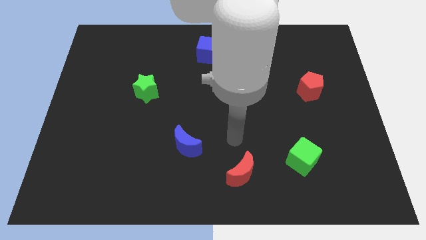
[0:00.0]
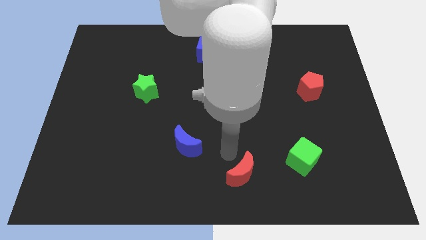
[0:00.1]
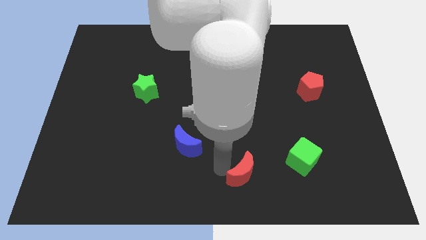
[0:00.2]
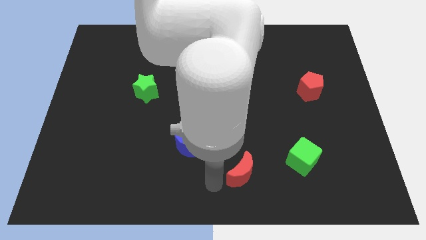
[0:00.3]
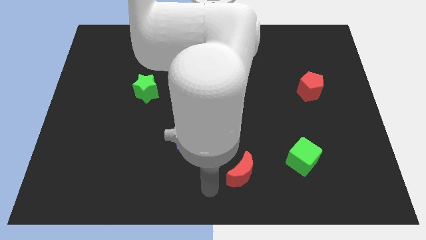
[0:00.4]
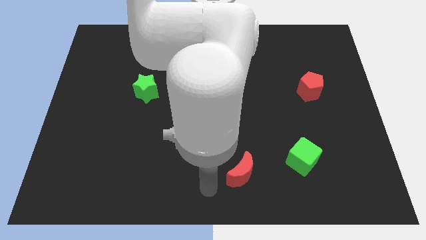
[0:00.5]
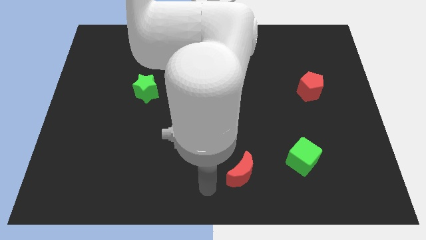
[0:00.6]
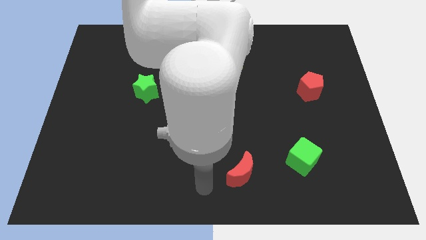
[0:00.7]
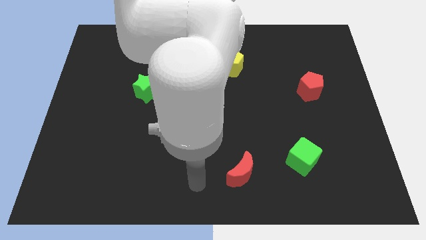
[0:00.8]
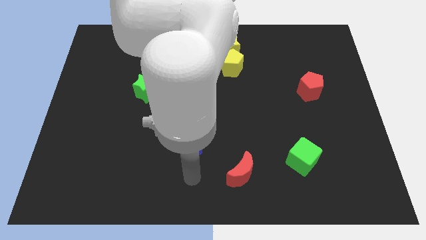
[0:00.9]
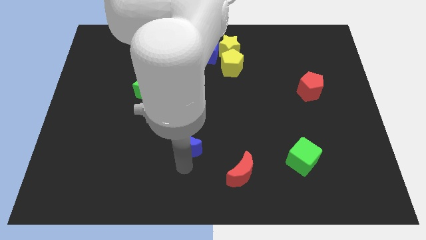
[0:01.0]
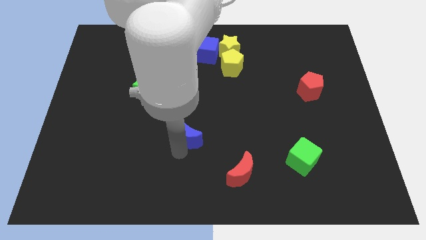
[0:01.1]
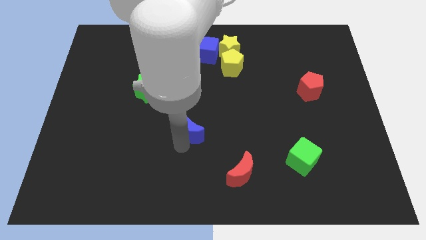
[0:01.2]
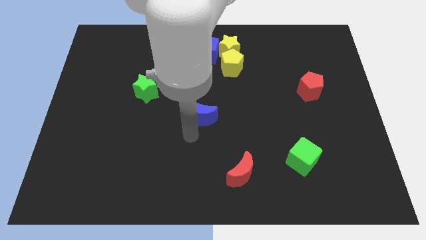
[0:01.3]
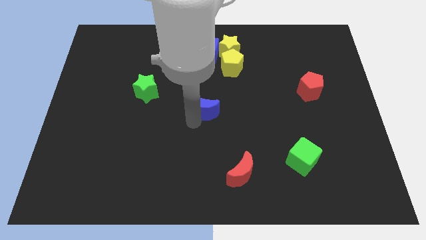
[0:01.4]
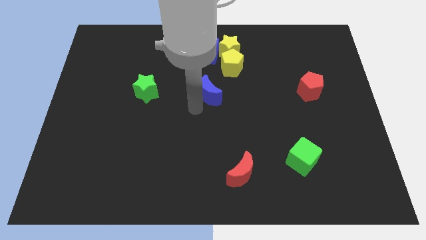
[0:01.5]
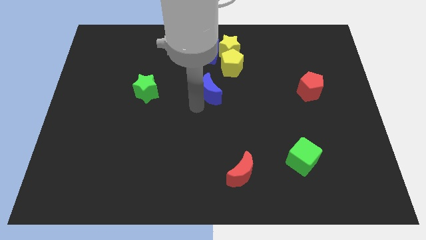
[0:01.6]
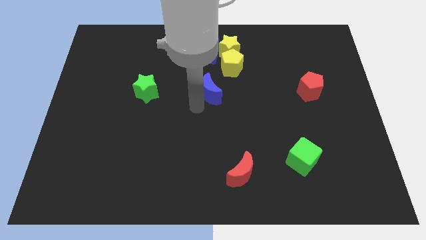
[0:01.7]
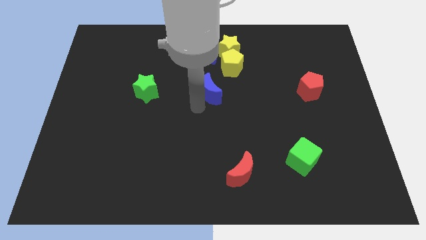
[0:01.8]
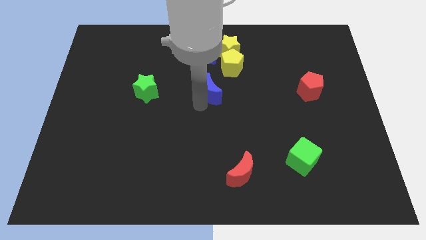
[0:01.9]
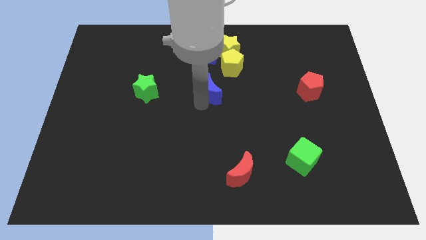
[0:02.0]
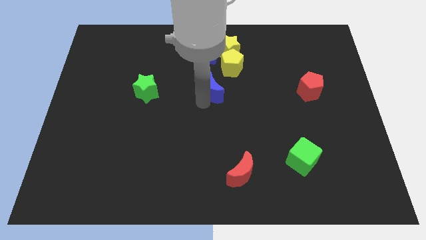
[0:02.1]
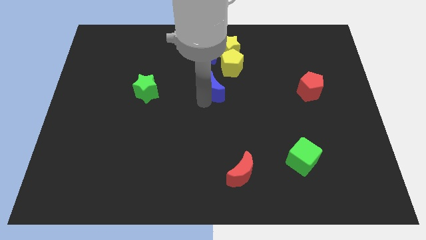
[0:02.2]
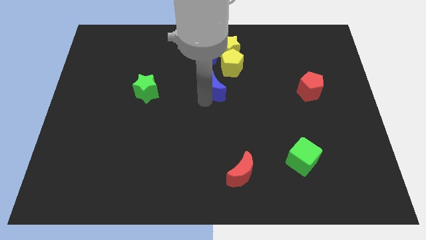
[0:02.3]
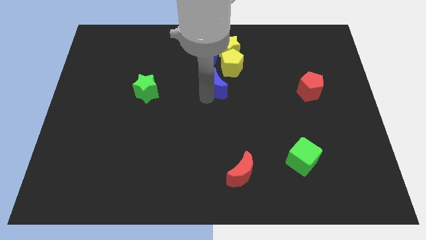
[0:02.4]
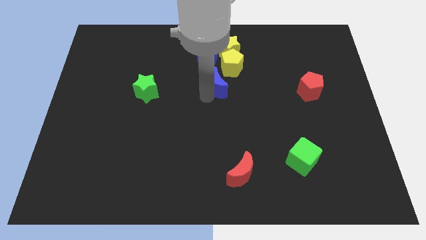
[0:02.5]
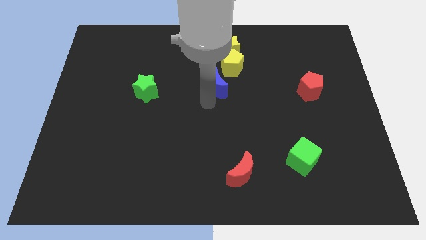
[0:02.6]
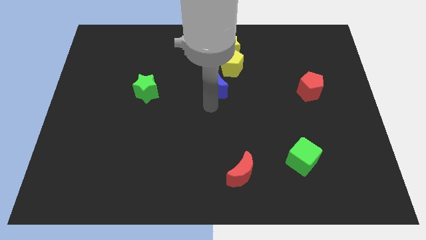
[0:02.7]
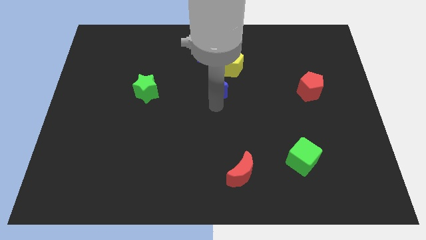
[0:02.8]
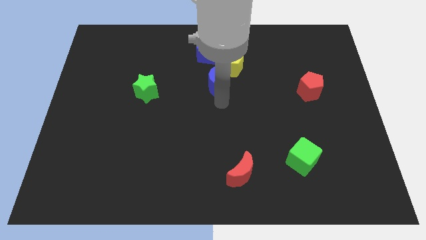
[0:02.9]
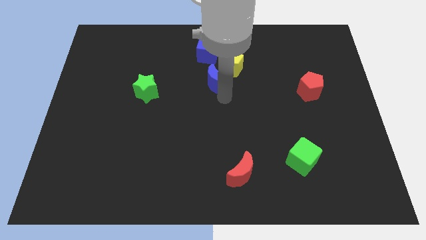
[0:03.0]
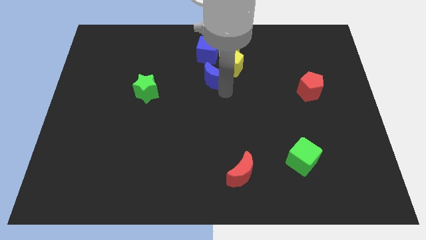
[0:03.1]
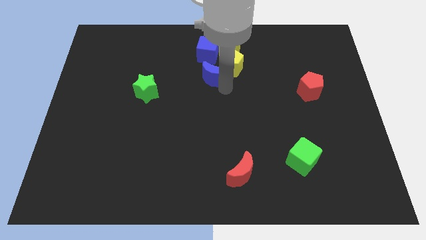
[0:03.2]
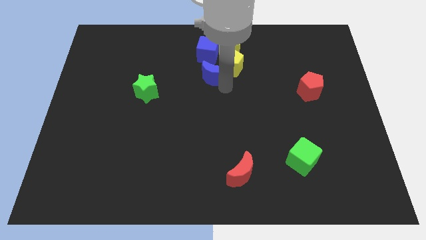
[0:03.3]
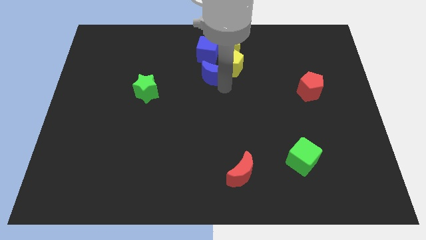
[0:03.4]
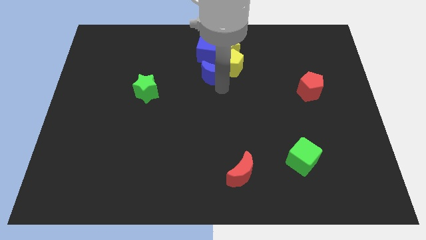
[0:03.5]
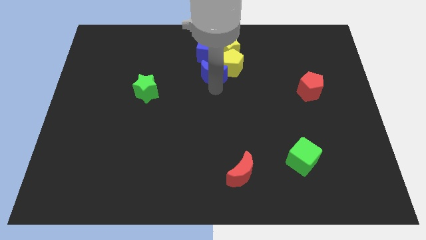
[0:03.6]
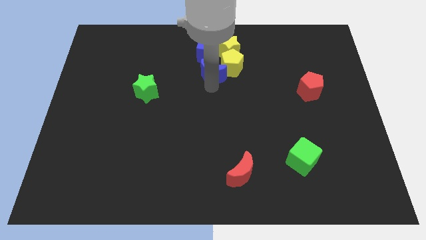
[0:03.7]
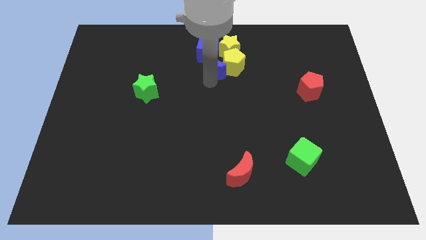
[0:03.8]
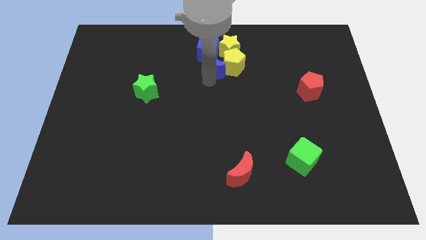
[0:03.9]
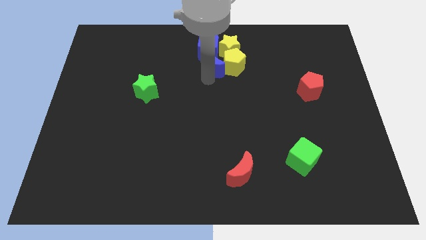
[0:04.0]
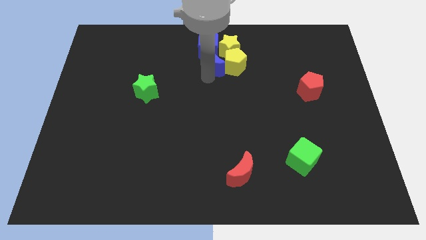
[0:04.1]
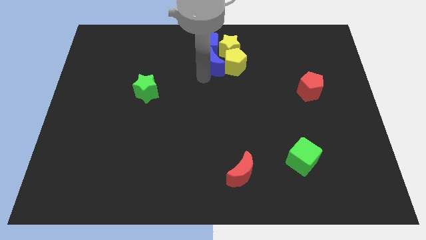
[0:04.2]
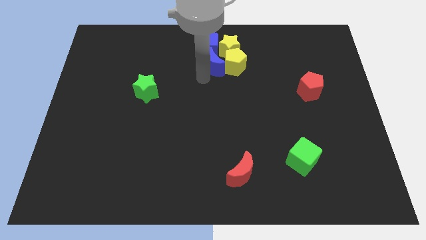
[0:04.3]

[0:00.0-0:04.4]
push the blue moon into the blue cube and the yellow pentagon

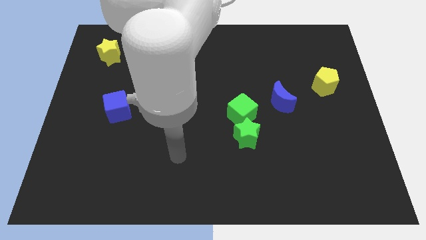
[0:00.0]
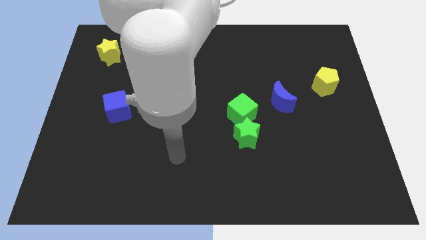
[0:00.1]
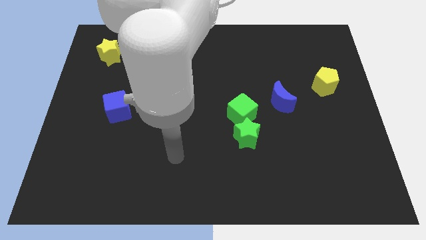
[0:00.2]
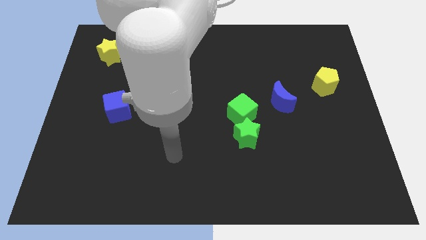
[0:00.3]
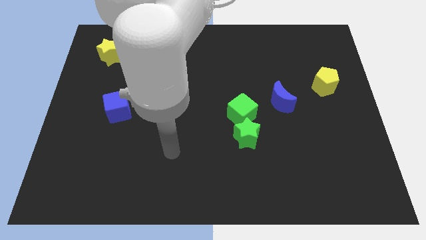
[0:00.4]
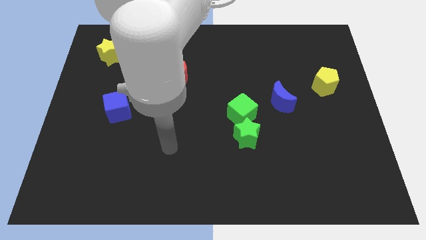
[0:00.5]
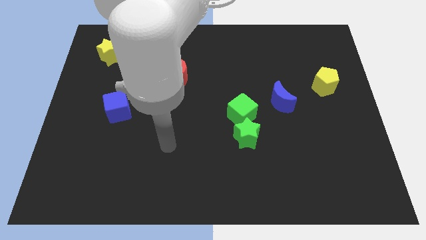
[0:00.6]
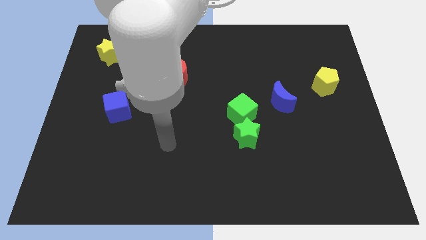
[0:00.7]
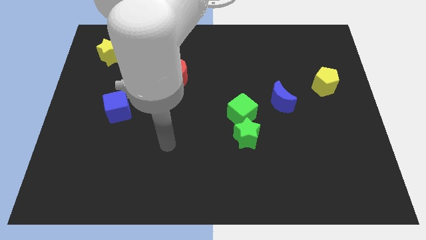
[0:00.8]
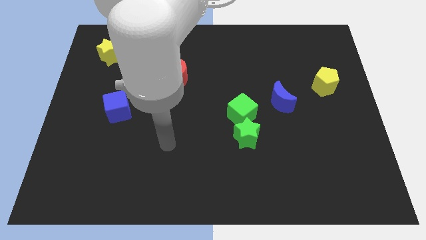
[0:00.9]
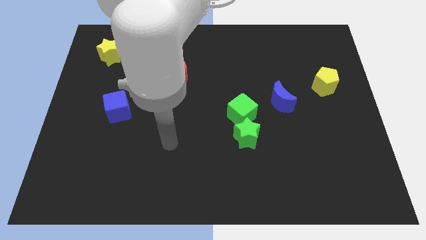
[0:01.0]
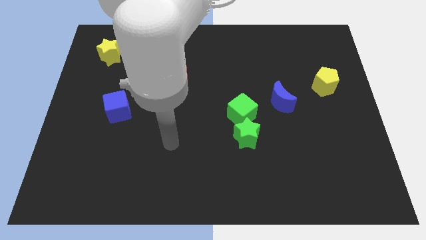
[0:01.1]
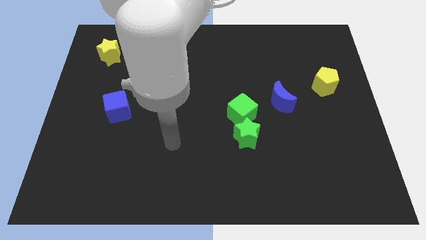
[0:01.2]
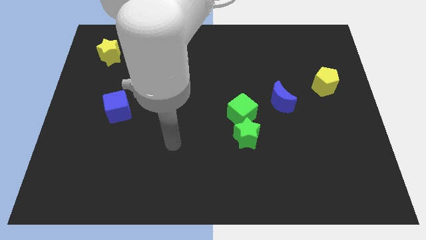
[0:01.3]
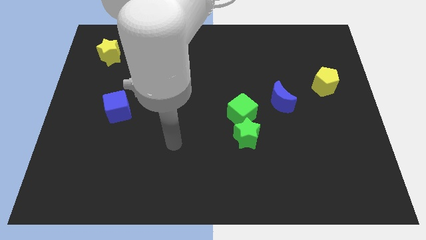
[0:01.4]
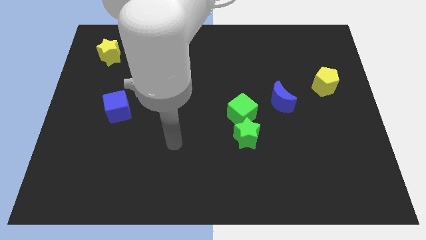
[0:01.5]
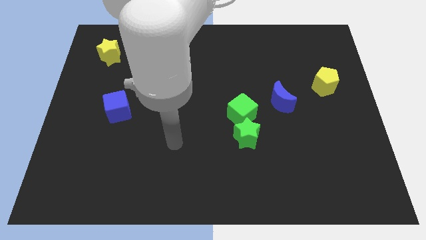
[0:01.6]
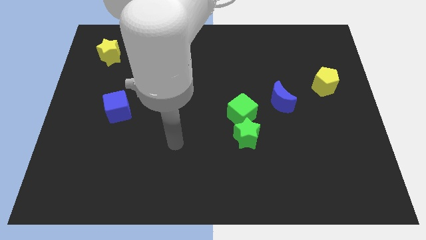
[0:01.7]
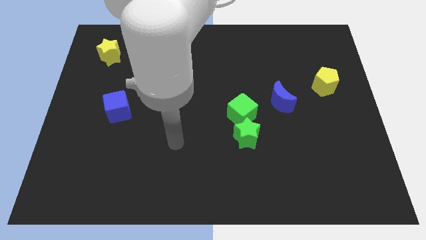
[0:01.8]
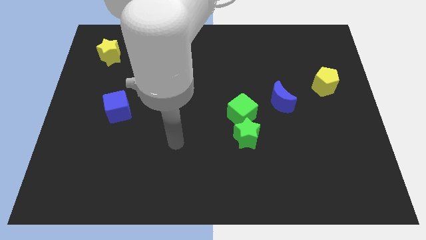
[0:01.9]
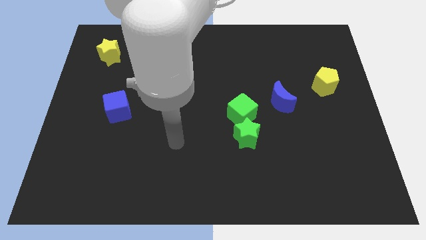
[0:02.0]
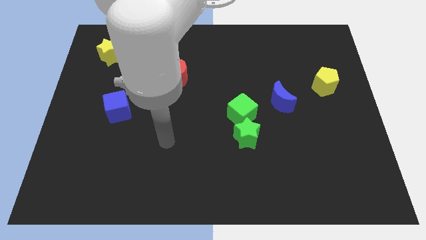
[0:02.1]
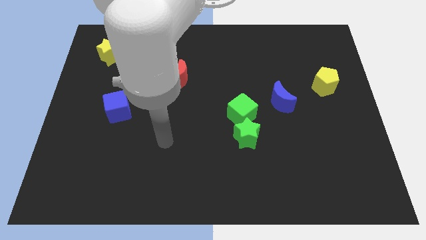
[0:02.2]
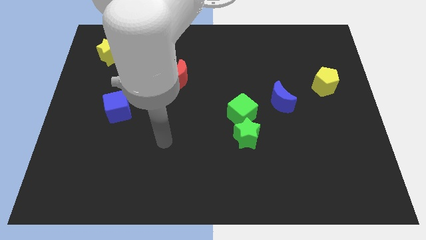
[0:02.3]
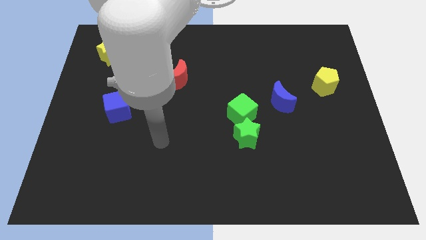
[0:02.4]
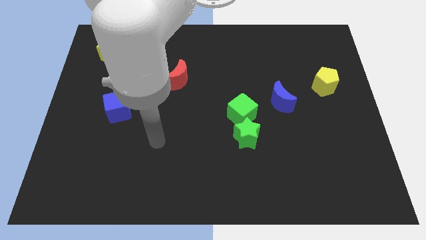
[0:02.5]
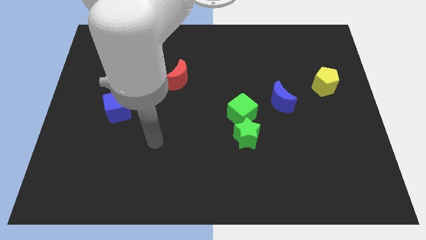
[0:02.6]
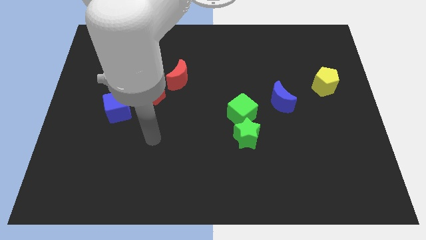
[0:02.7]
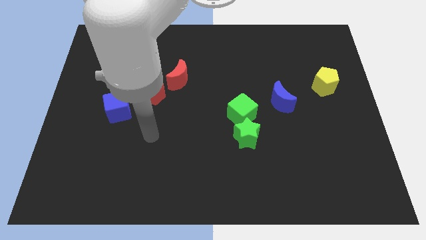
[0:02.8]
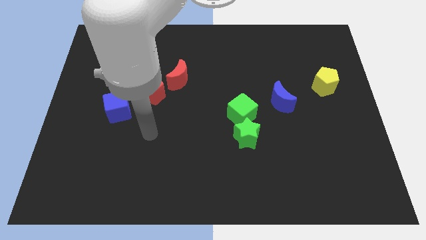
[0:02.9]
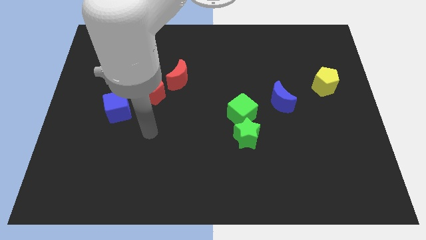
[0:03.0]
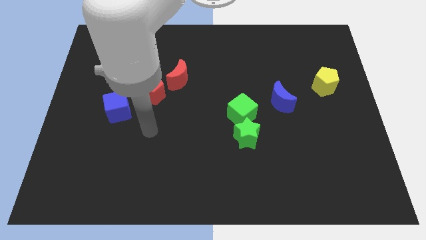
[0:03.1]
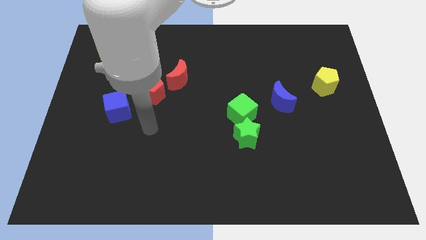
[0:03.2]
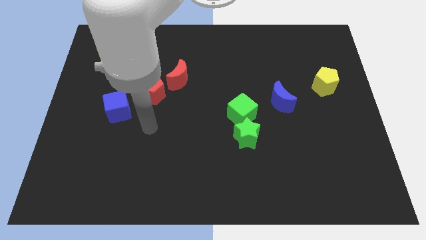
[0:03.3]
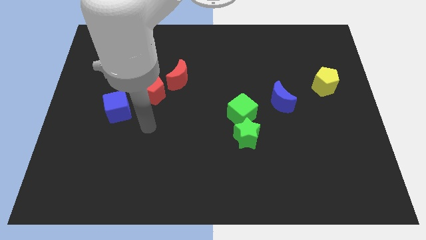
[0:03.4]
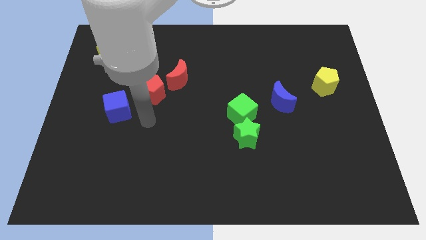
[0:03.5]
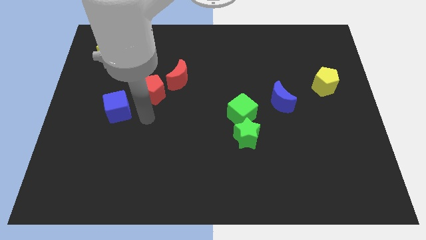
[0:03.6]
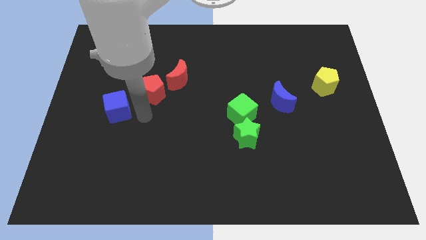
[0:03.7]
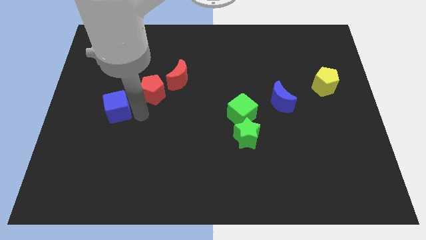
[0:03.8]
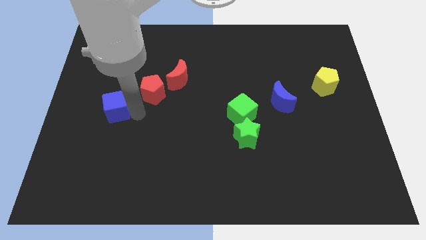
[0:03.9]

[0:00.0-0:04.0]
move your arm close to the blue cube

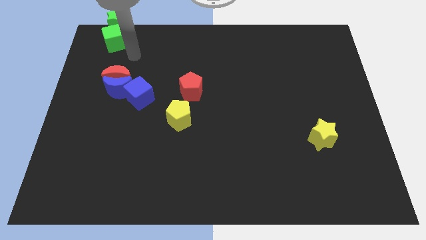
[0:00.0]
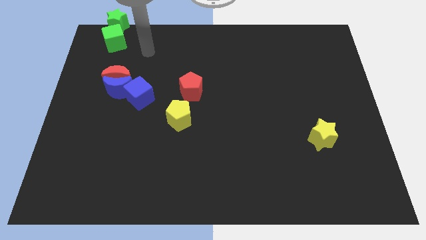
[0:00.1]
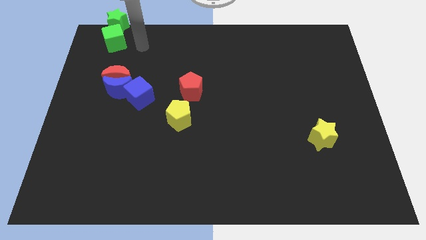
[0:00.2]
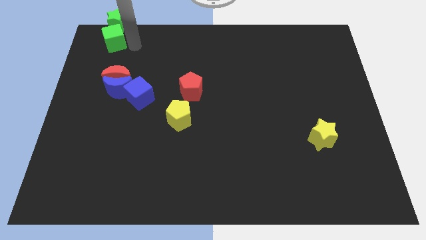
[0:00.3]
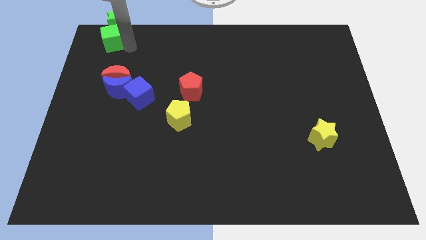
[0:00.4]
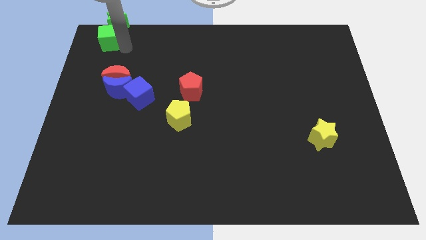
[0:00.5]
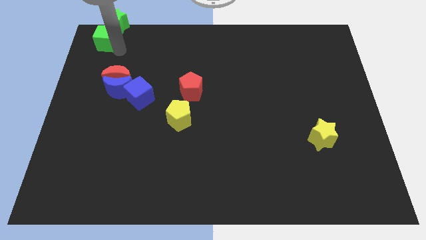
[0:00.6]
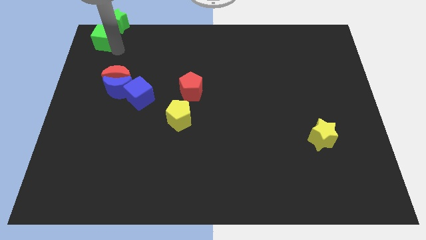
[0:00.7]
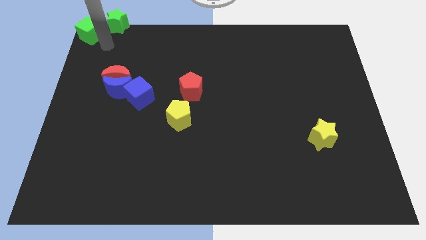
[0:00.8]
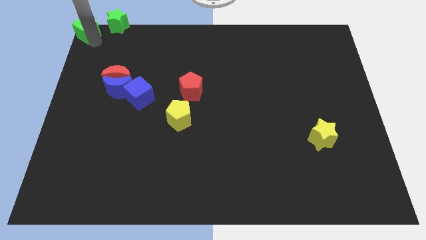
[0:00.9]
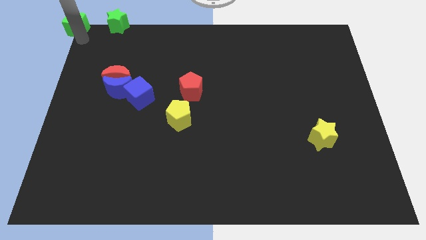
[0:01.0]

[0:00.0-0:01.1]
slide green cube at top left corner
